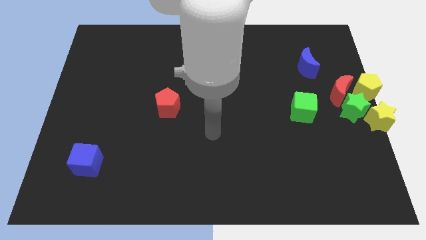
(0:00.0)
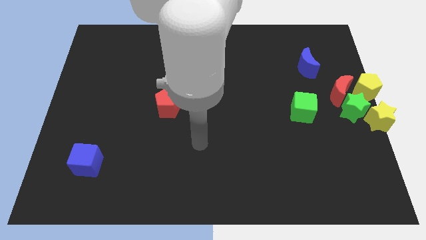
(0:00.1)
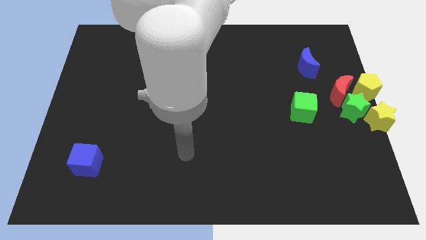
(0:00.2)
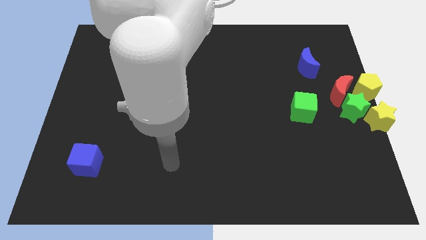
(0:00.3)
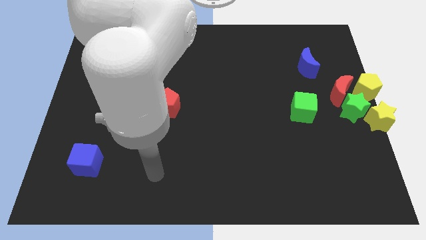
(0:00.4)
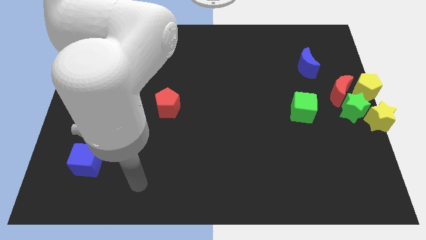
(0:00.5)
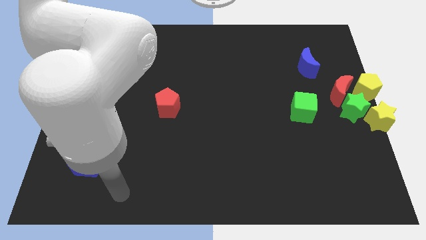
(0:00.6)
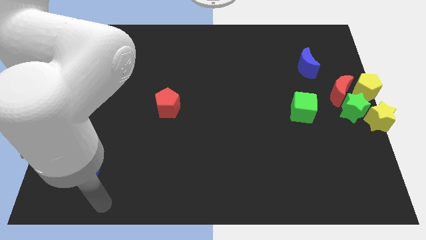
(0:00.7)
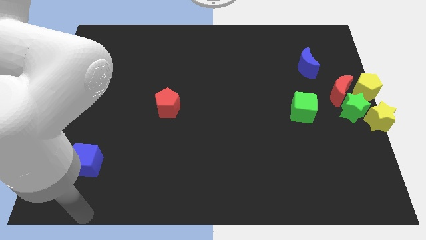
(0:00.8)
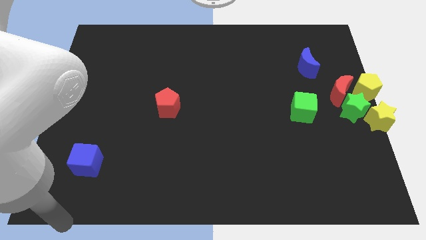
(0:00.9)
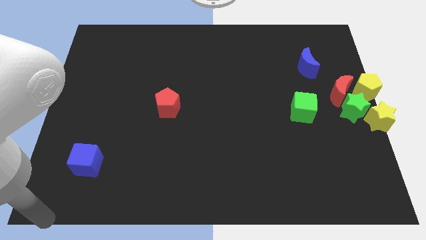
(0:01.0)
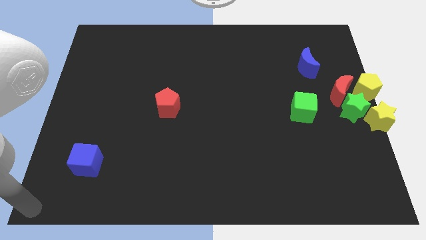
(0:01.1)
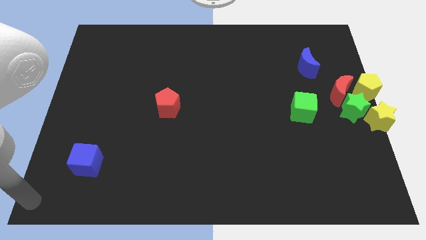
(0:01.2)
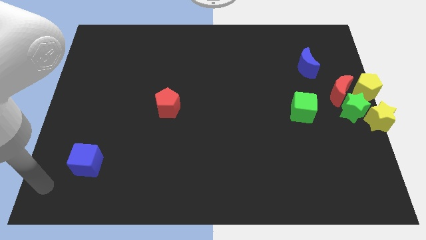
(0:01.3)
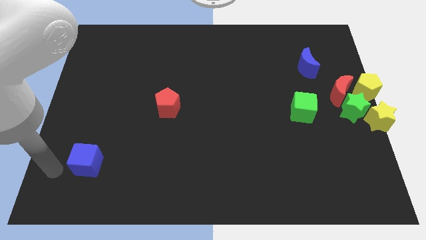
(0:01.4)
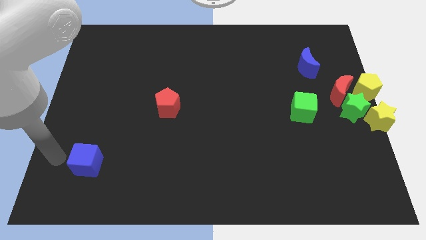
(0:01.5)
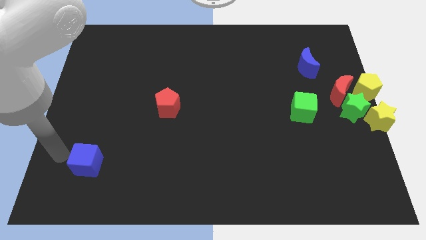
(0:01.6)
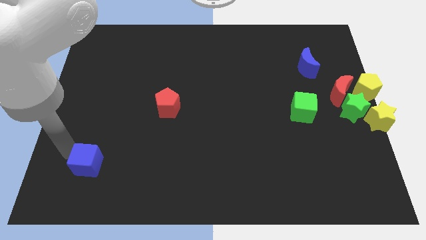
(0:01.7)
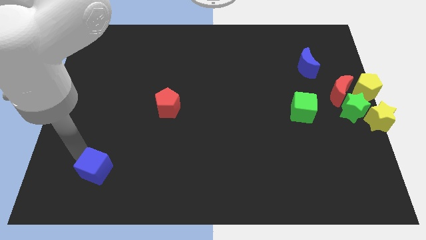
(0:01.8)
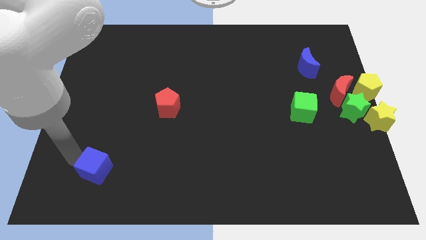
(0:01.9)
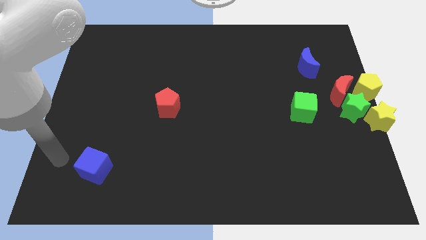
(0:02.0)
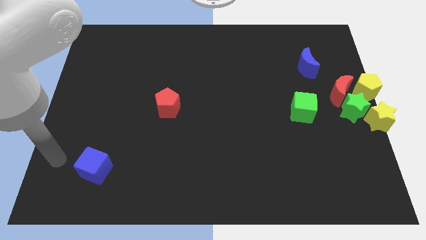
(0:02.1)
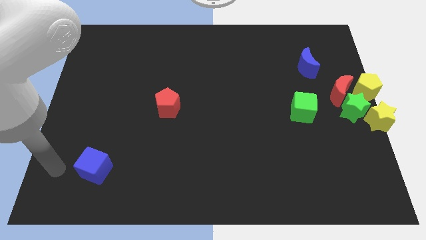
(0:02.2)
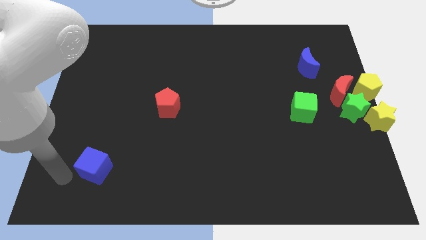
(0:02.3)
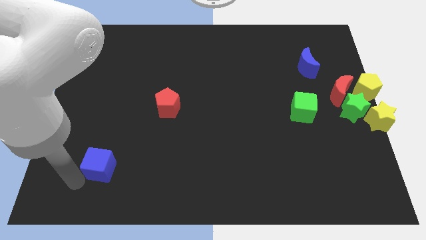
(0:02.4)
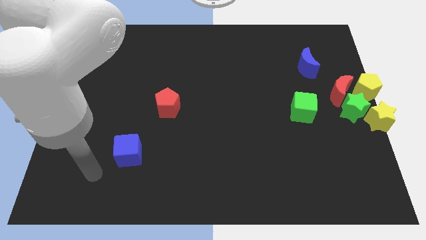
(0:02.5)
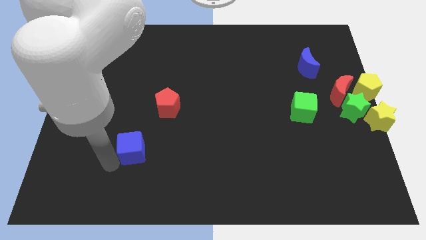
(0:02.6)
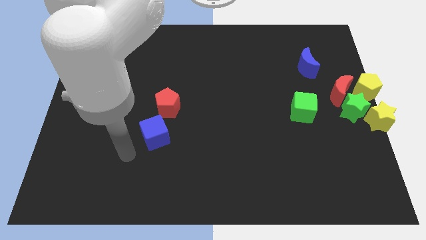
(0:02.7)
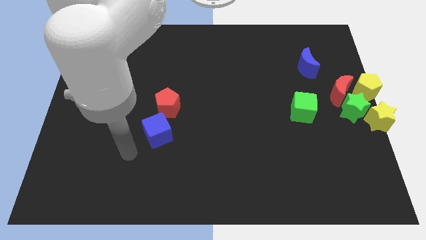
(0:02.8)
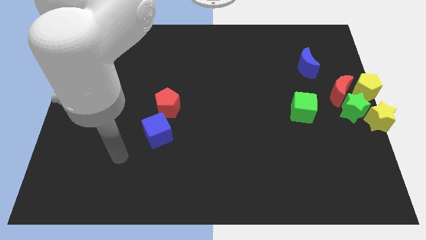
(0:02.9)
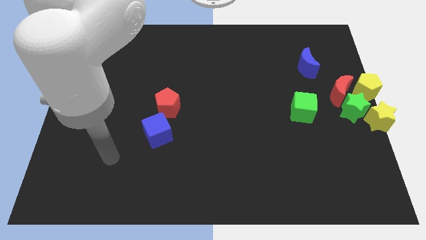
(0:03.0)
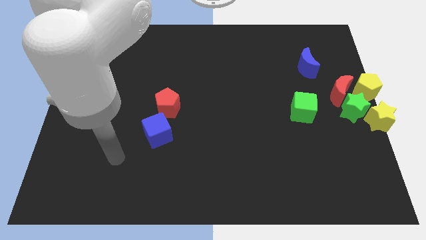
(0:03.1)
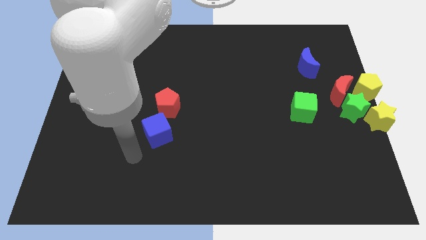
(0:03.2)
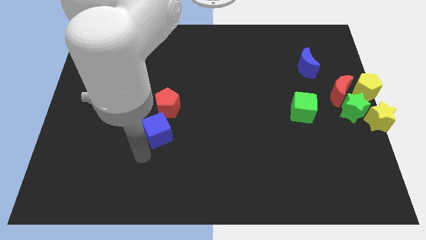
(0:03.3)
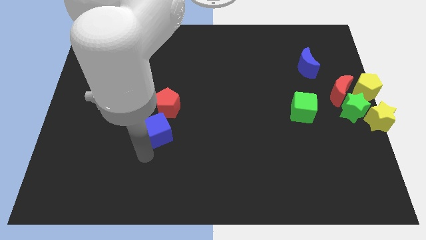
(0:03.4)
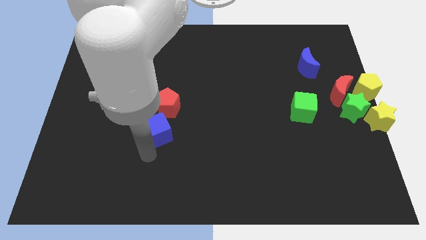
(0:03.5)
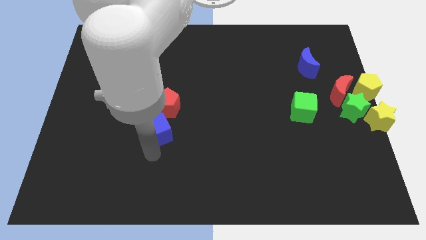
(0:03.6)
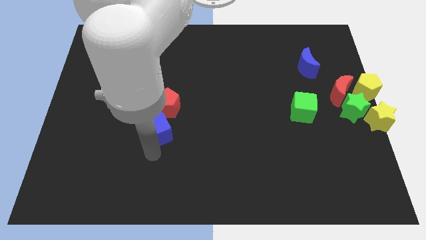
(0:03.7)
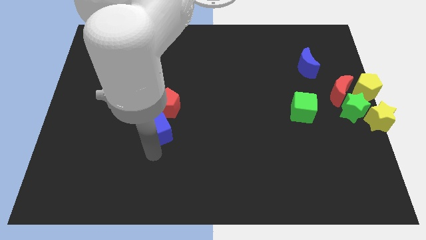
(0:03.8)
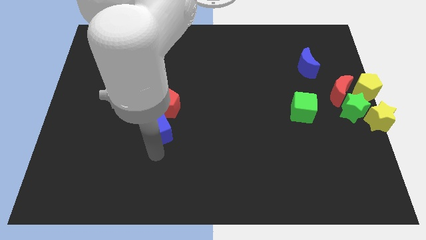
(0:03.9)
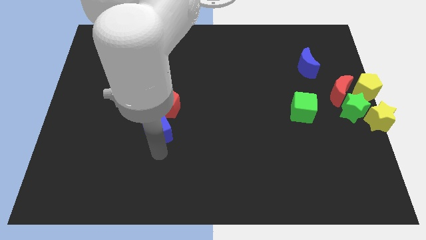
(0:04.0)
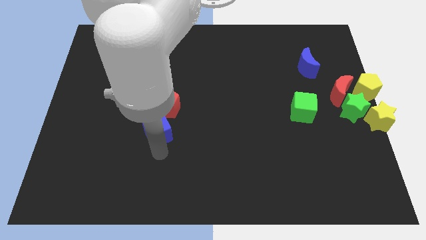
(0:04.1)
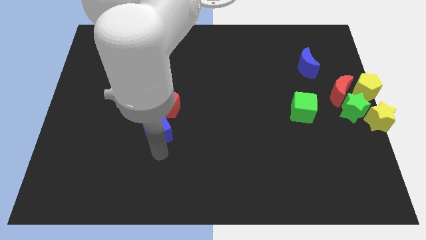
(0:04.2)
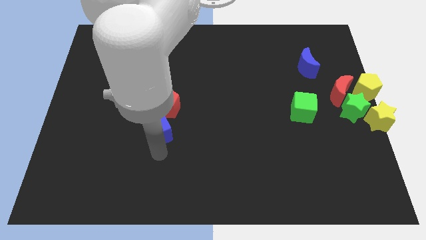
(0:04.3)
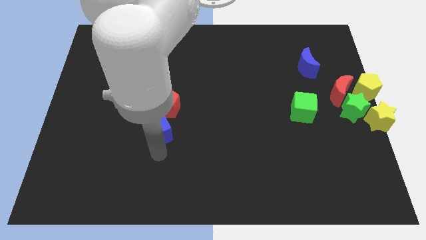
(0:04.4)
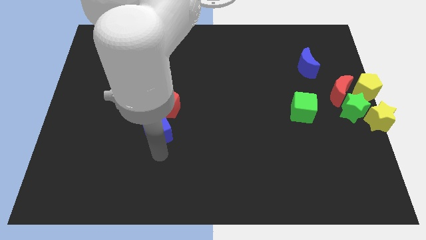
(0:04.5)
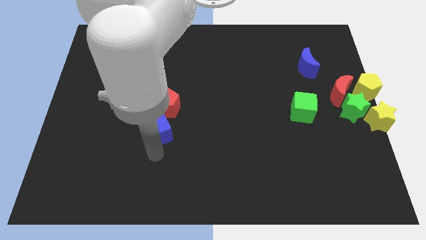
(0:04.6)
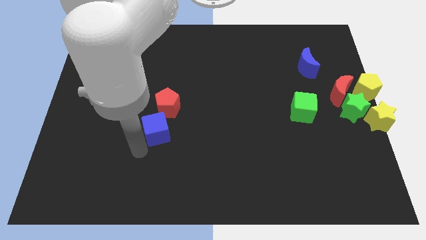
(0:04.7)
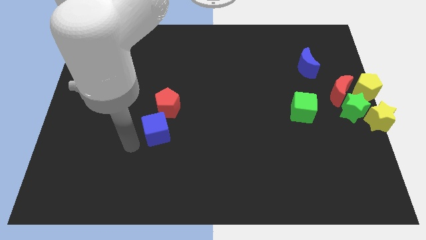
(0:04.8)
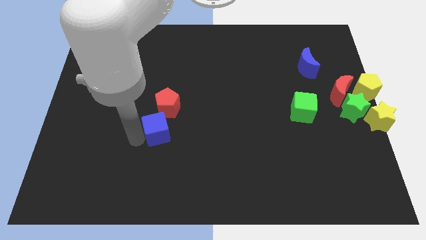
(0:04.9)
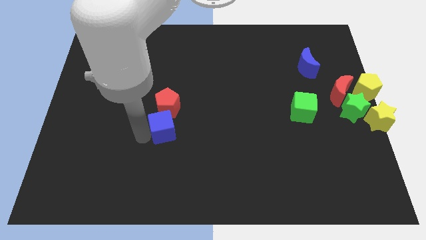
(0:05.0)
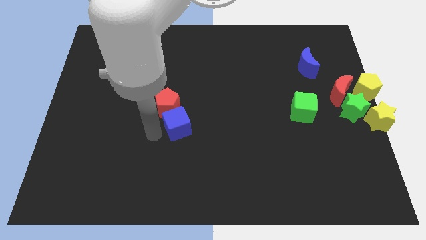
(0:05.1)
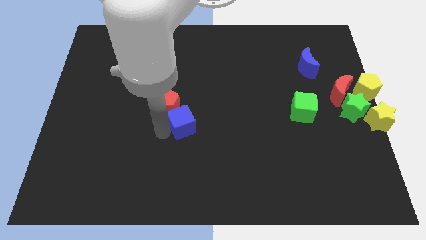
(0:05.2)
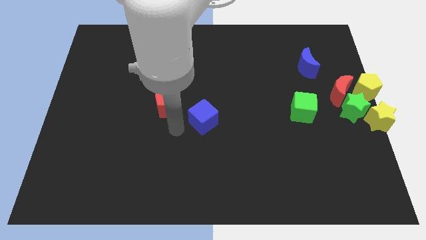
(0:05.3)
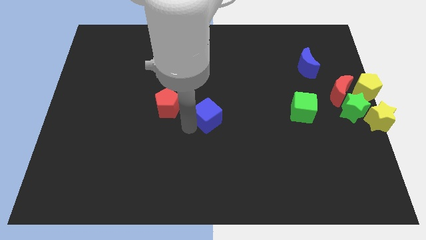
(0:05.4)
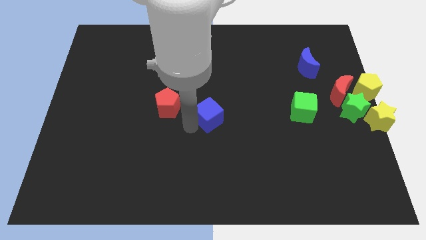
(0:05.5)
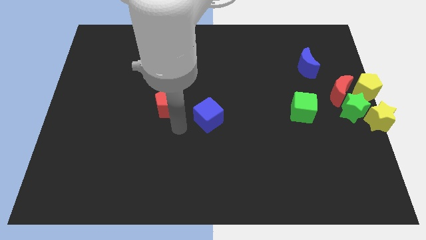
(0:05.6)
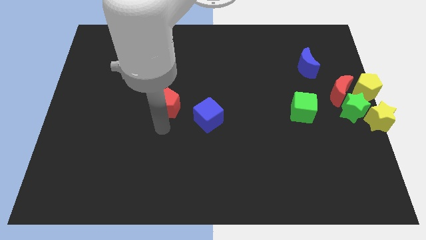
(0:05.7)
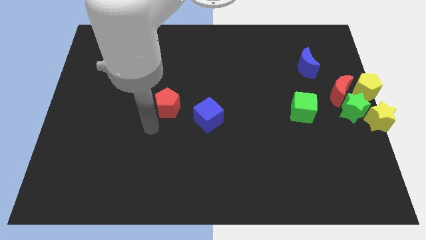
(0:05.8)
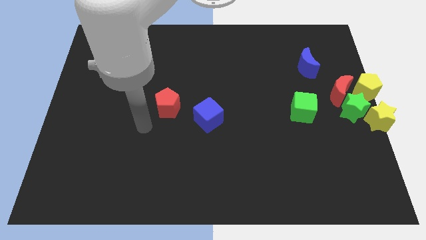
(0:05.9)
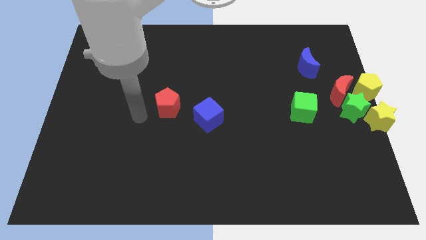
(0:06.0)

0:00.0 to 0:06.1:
place the blue cube right to the red pentagon

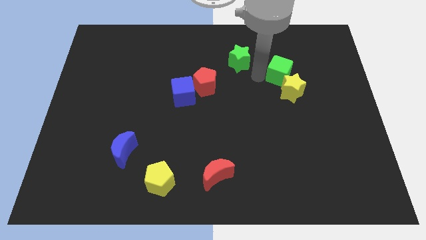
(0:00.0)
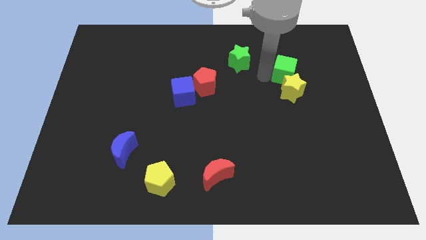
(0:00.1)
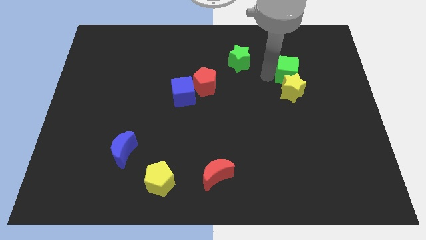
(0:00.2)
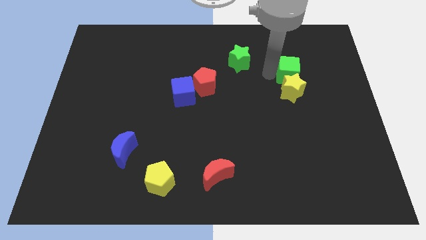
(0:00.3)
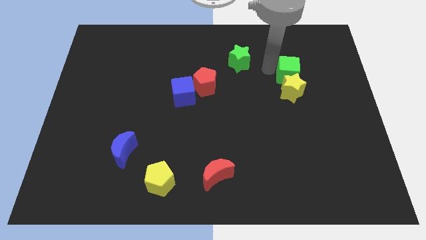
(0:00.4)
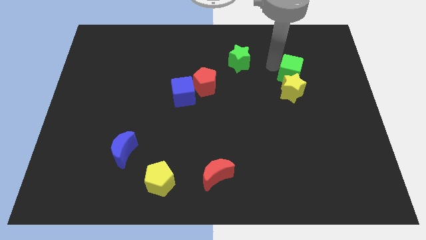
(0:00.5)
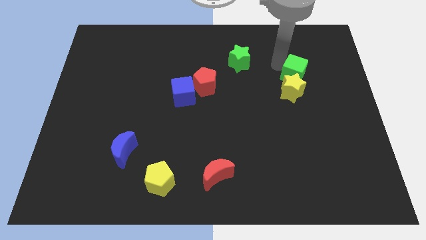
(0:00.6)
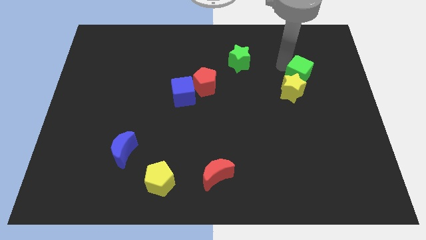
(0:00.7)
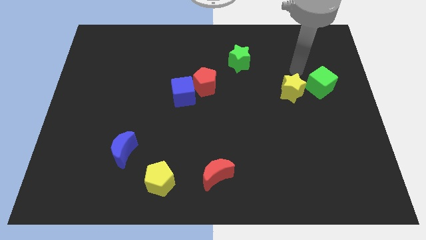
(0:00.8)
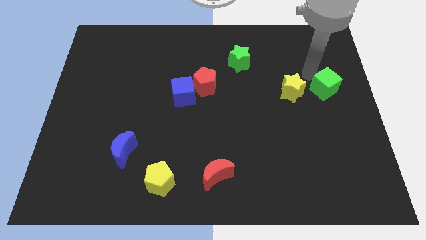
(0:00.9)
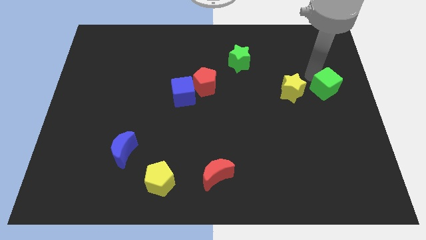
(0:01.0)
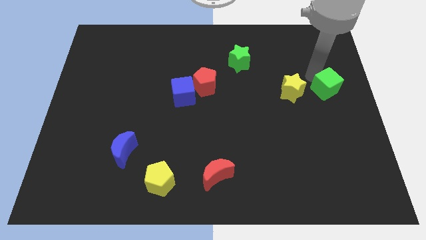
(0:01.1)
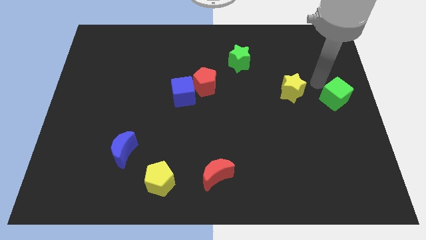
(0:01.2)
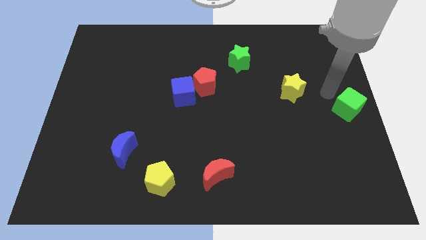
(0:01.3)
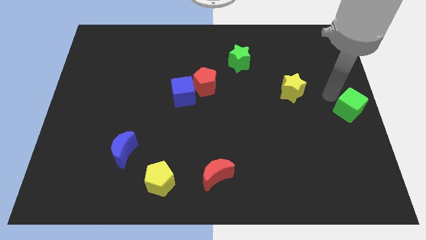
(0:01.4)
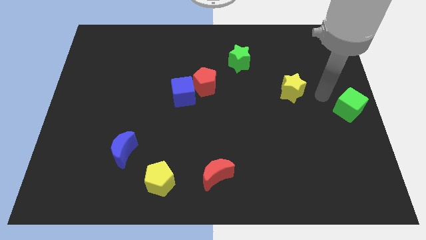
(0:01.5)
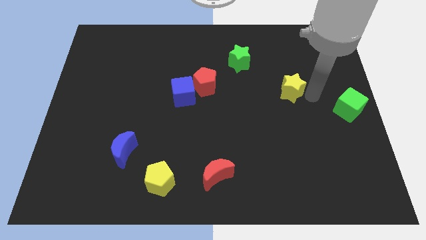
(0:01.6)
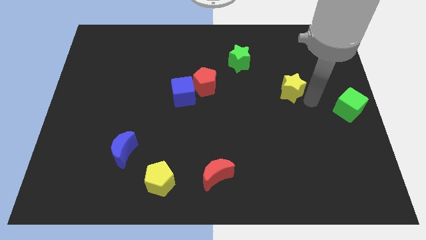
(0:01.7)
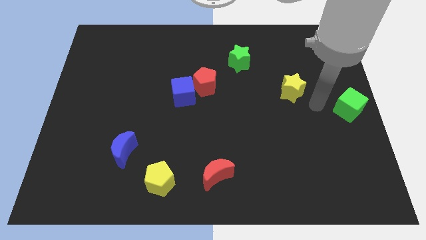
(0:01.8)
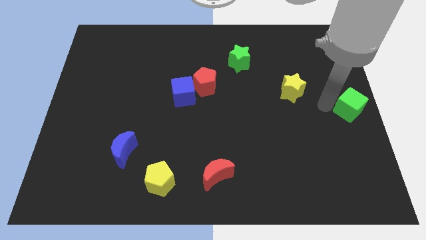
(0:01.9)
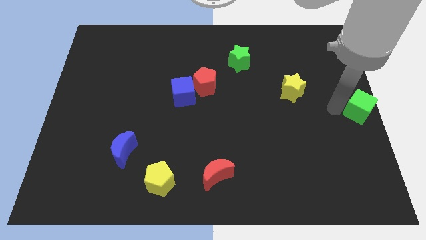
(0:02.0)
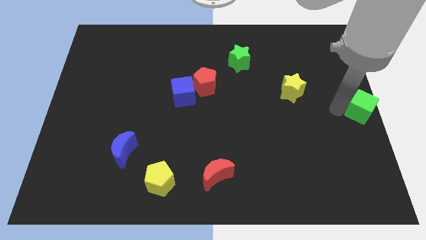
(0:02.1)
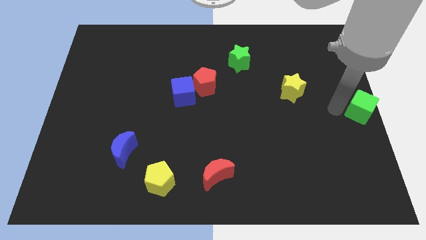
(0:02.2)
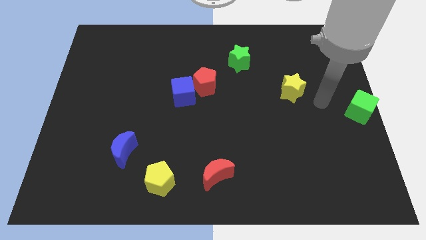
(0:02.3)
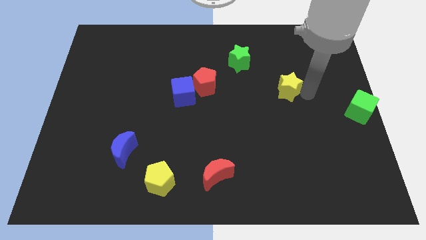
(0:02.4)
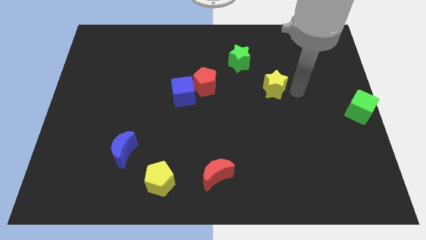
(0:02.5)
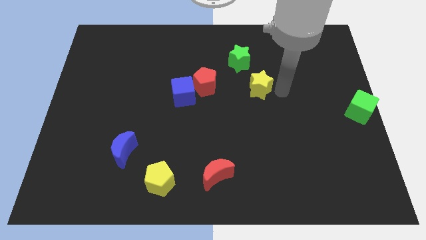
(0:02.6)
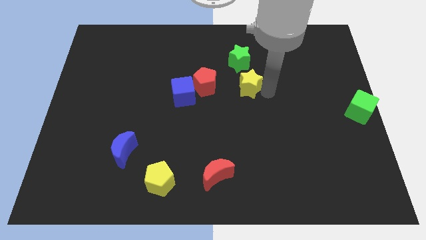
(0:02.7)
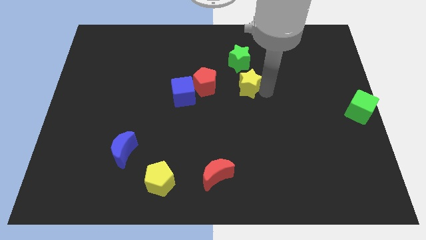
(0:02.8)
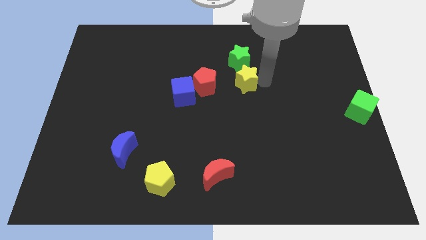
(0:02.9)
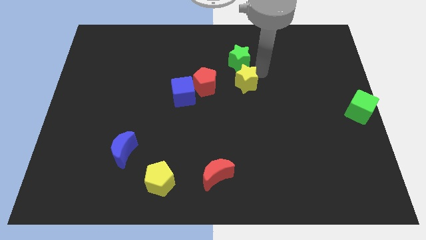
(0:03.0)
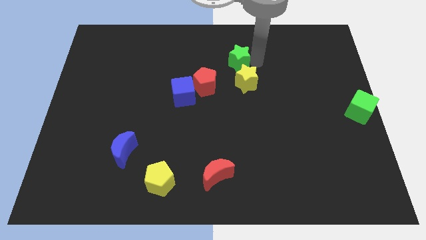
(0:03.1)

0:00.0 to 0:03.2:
place the yellow star below the green star
